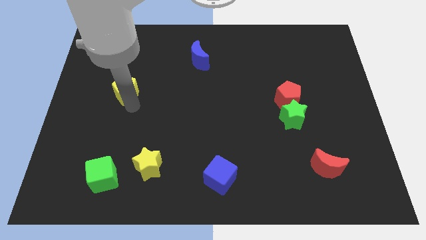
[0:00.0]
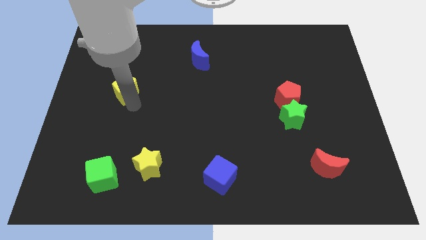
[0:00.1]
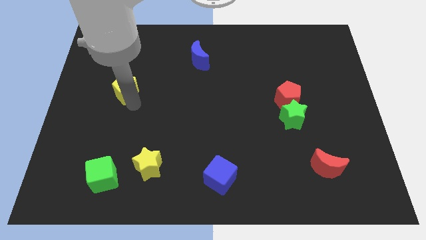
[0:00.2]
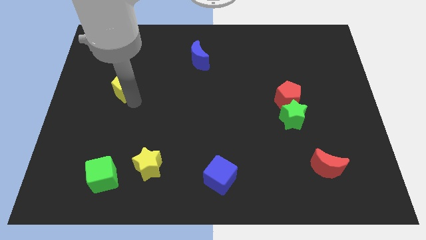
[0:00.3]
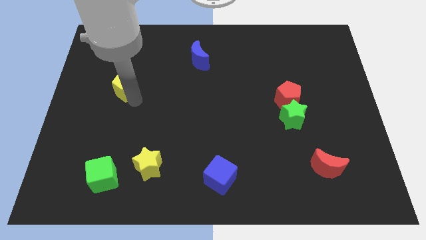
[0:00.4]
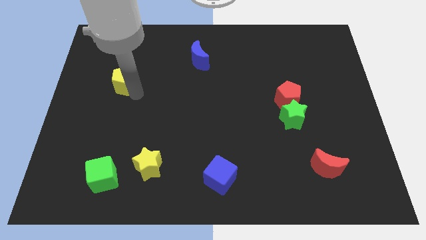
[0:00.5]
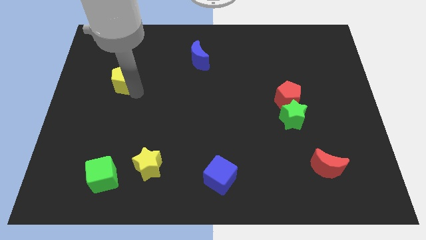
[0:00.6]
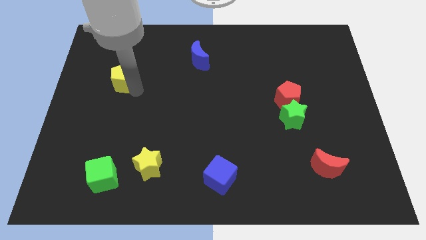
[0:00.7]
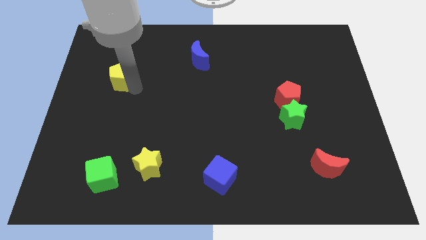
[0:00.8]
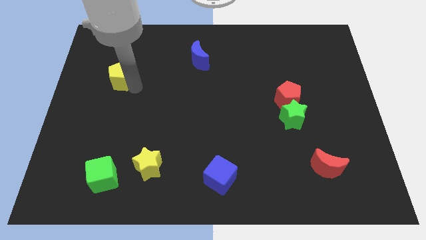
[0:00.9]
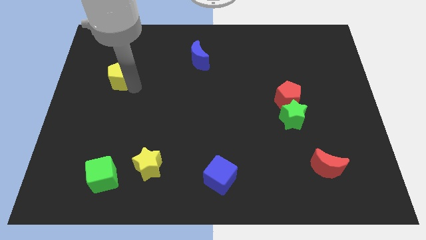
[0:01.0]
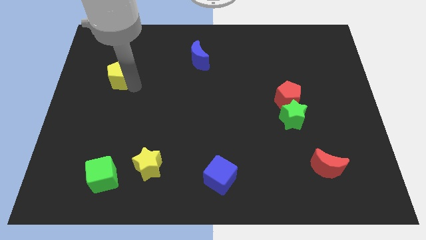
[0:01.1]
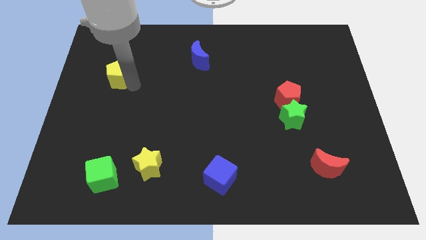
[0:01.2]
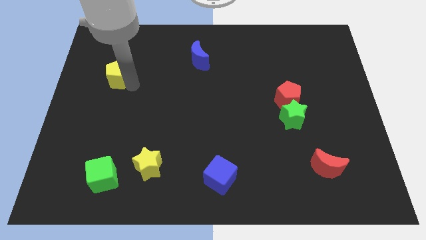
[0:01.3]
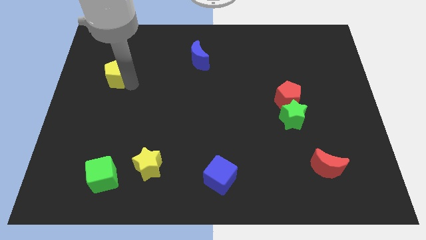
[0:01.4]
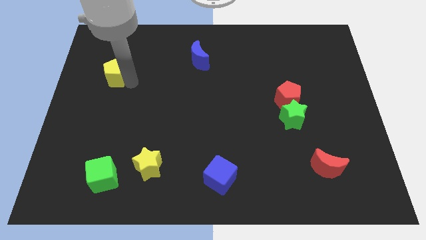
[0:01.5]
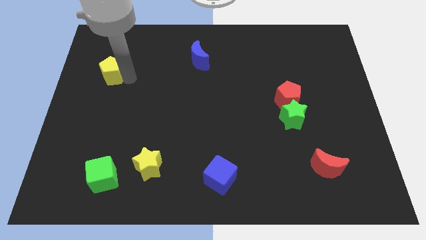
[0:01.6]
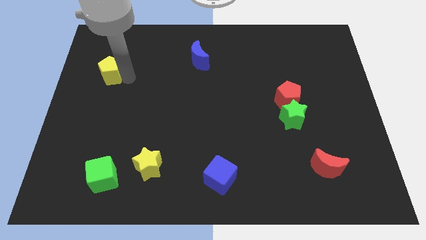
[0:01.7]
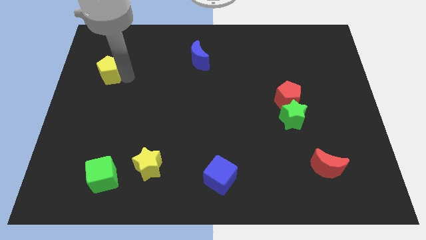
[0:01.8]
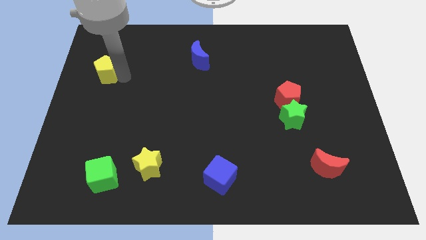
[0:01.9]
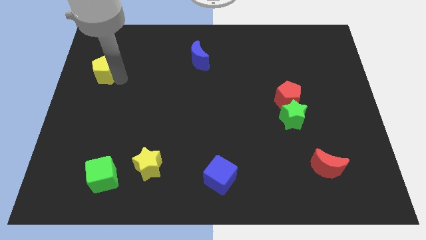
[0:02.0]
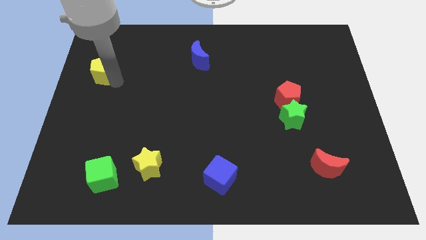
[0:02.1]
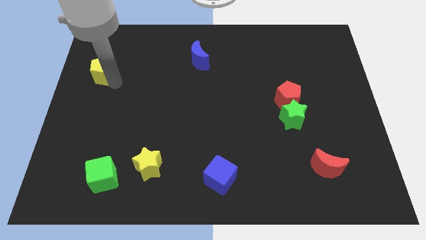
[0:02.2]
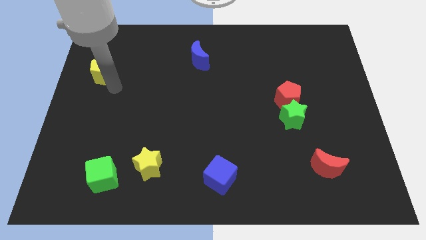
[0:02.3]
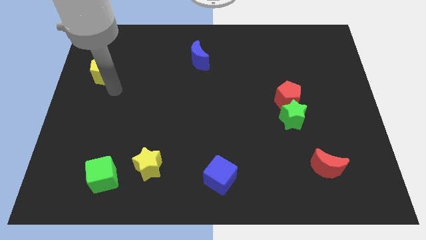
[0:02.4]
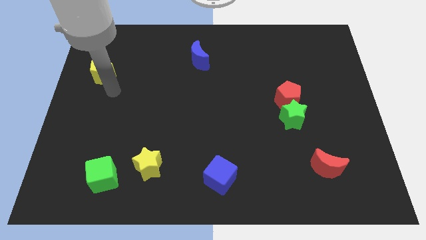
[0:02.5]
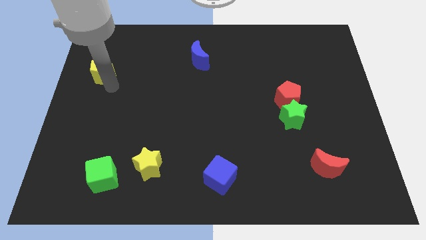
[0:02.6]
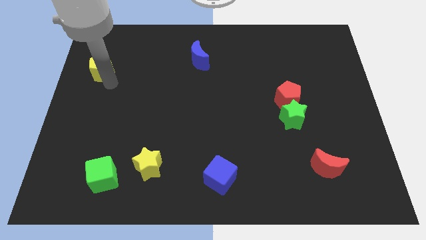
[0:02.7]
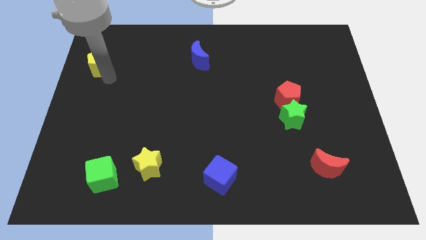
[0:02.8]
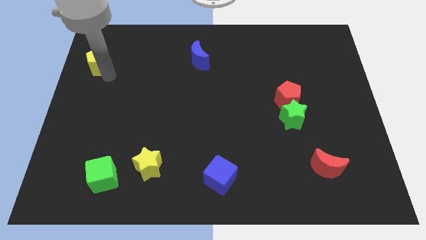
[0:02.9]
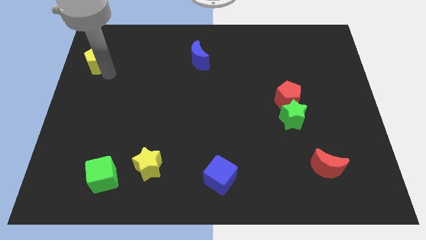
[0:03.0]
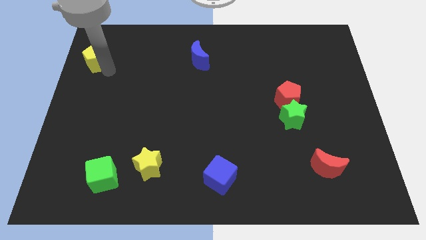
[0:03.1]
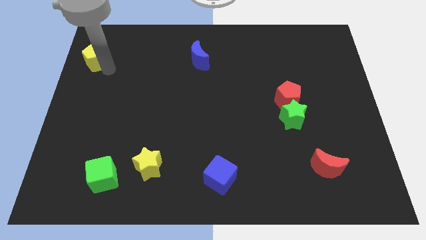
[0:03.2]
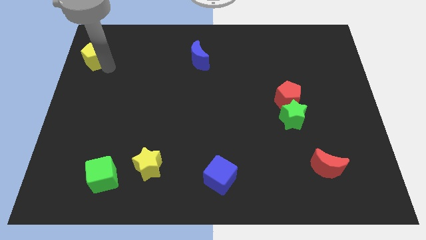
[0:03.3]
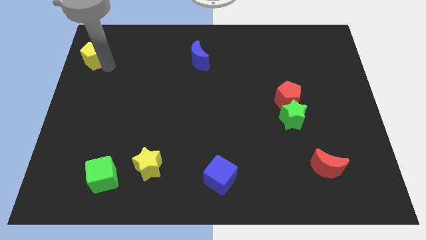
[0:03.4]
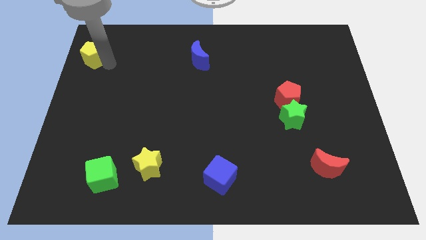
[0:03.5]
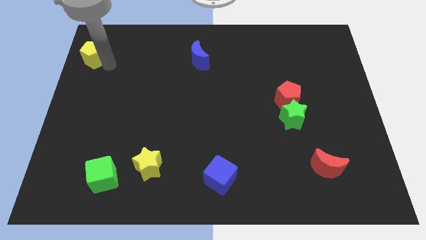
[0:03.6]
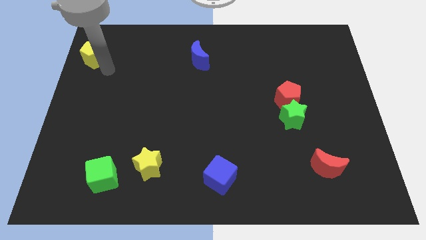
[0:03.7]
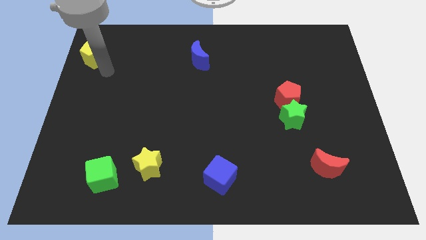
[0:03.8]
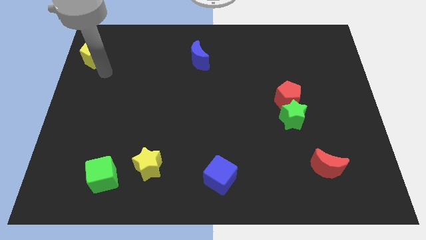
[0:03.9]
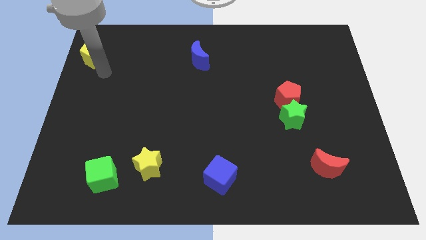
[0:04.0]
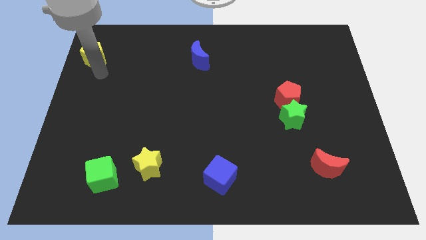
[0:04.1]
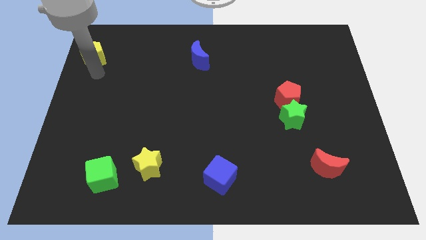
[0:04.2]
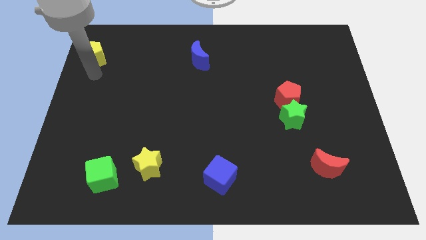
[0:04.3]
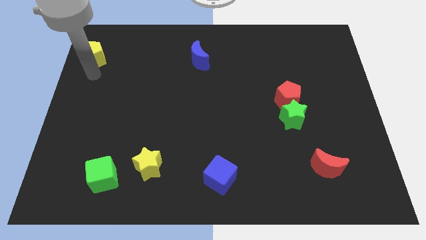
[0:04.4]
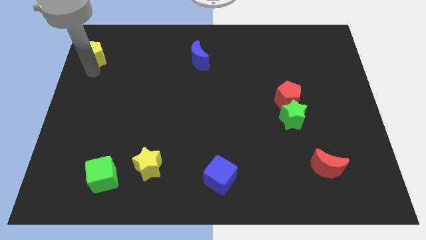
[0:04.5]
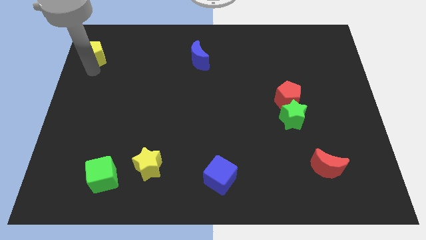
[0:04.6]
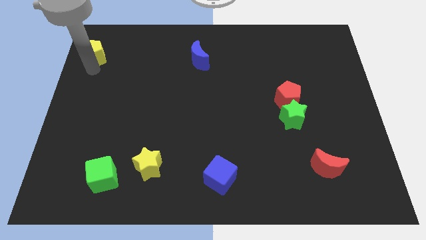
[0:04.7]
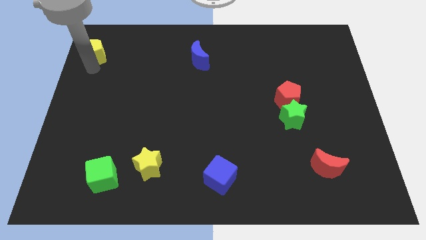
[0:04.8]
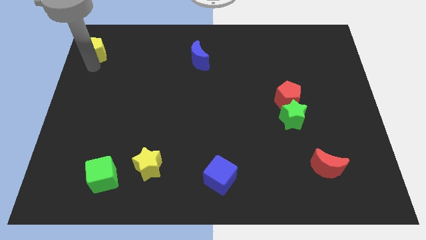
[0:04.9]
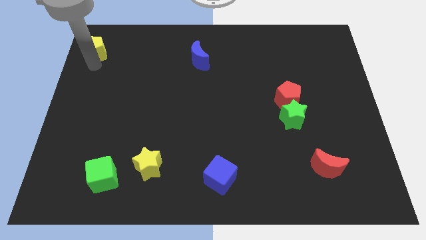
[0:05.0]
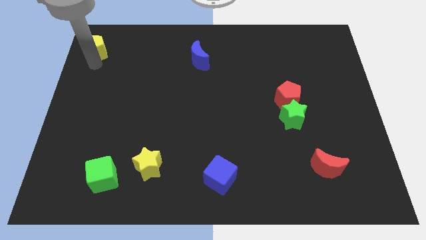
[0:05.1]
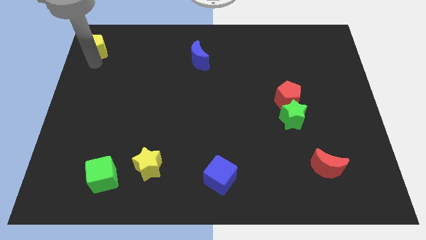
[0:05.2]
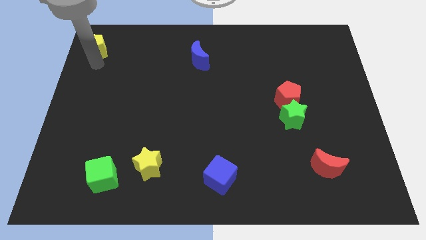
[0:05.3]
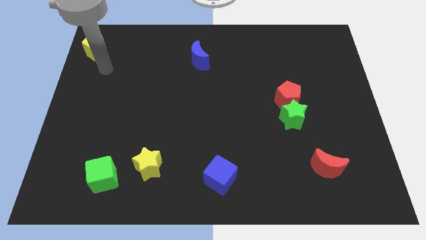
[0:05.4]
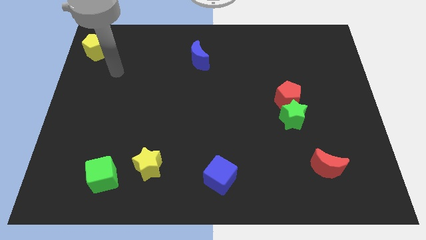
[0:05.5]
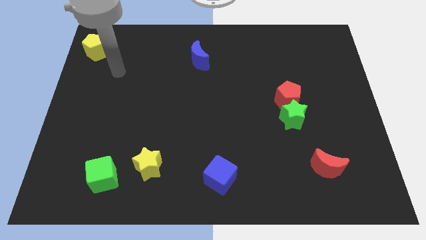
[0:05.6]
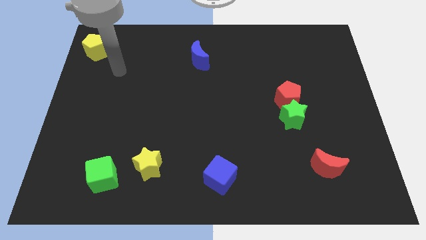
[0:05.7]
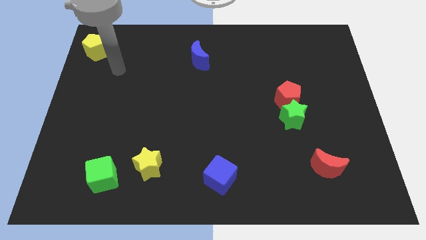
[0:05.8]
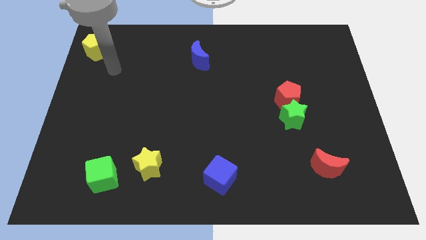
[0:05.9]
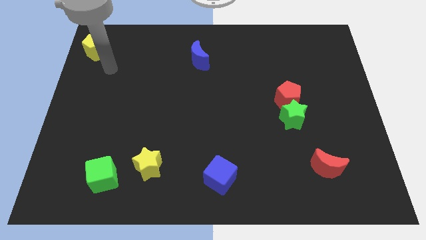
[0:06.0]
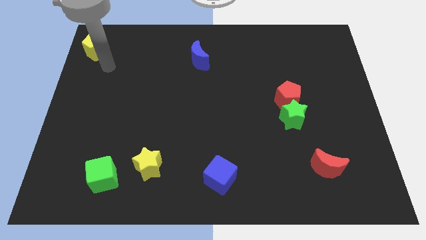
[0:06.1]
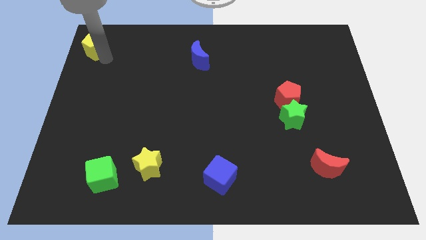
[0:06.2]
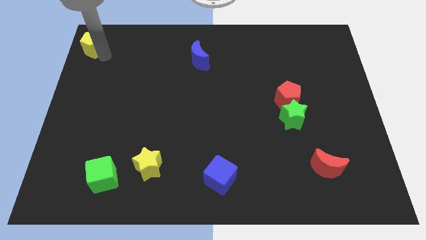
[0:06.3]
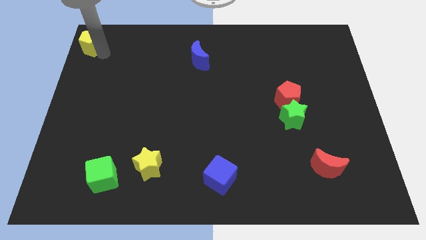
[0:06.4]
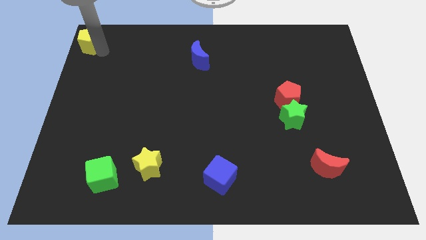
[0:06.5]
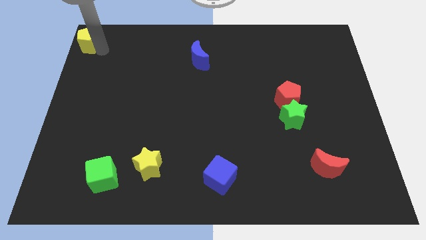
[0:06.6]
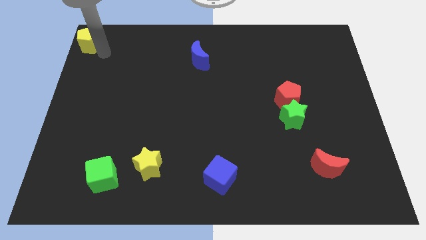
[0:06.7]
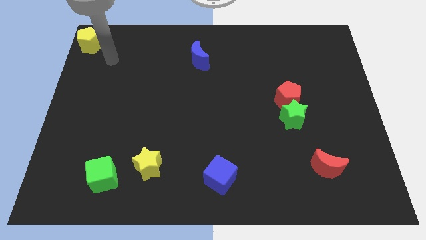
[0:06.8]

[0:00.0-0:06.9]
move the yellow pentagon to the top left corner of the board

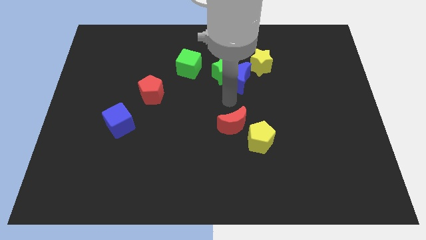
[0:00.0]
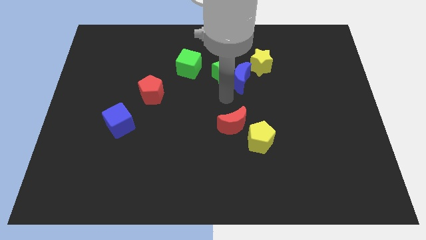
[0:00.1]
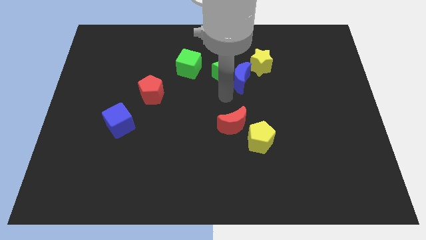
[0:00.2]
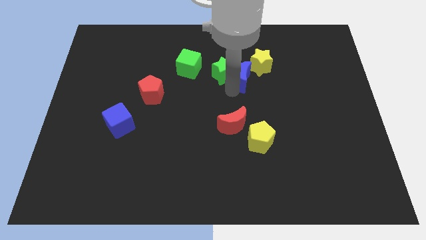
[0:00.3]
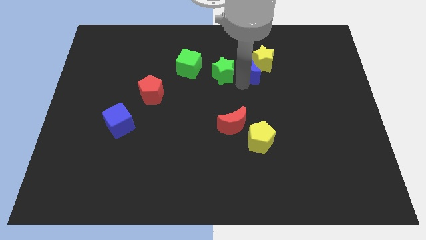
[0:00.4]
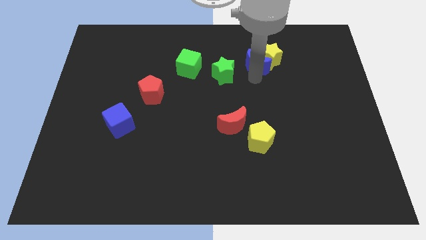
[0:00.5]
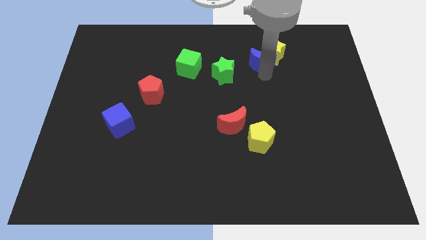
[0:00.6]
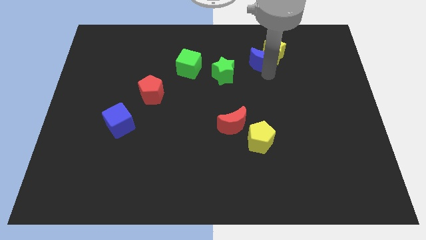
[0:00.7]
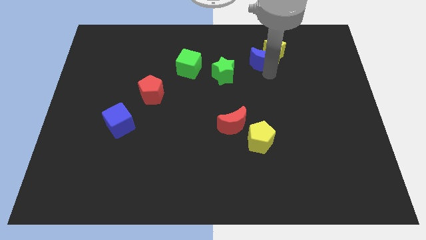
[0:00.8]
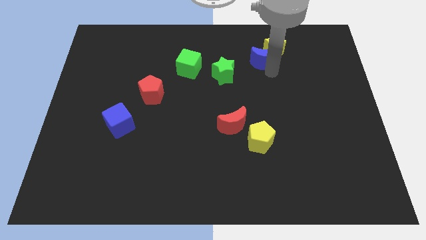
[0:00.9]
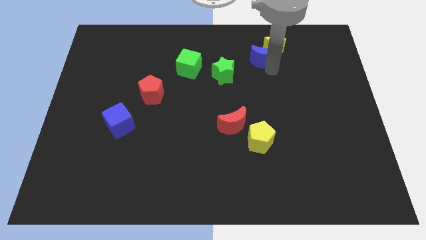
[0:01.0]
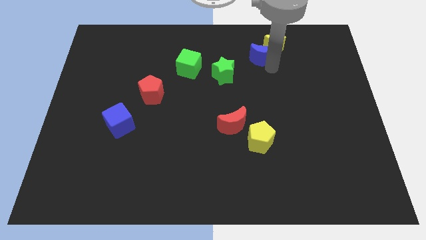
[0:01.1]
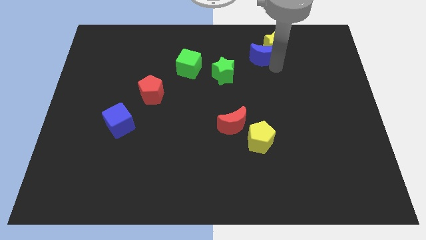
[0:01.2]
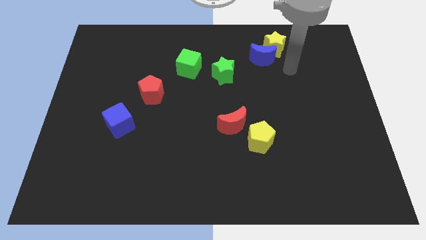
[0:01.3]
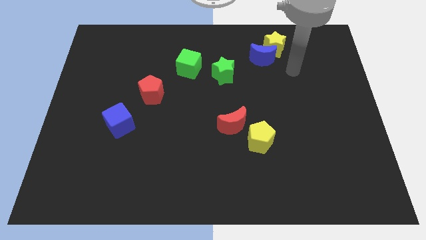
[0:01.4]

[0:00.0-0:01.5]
slide blue moon and the yellow star away from the green star

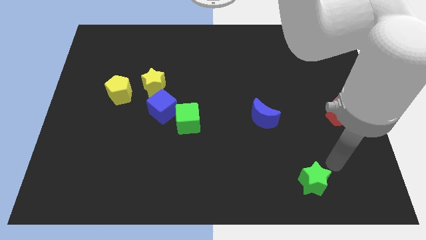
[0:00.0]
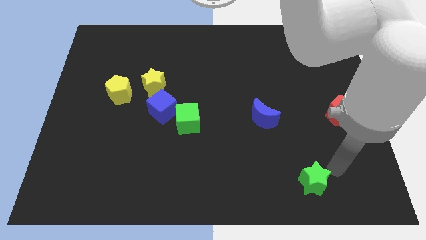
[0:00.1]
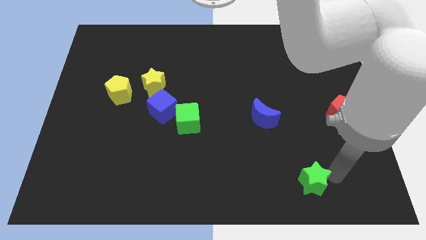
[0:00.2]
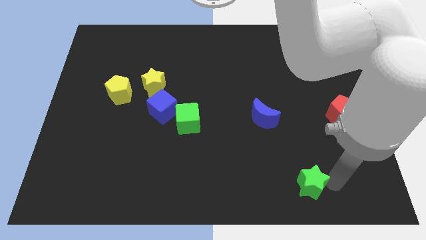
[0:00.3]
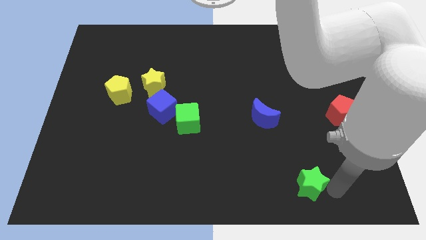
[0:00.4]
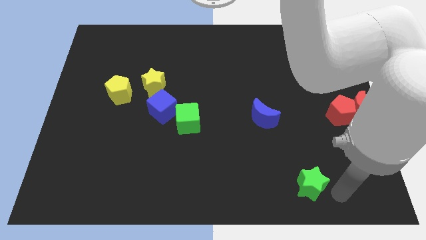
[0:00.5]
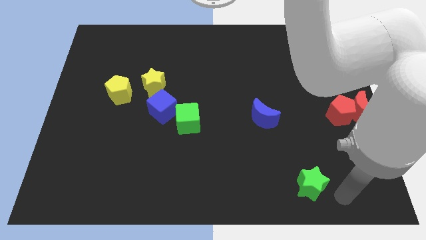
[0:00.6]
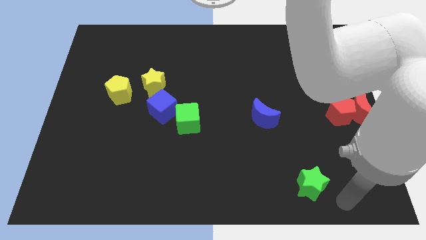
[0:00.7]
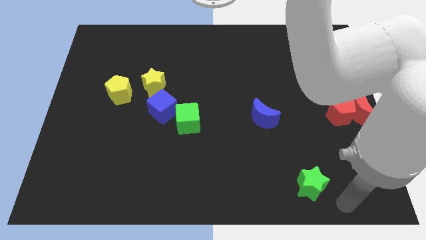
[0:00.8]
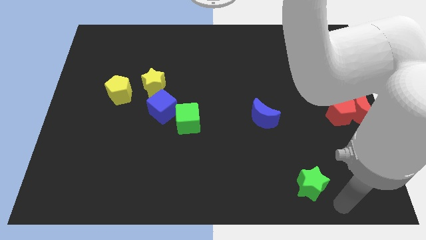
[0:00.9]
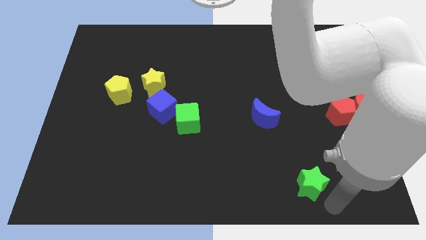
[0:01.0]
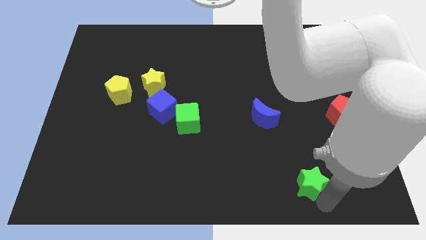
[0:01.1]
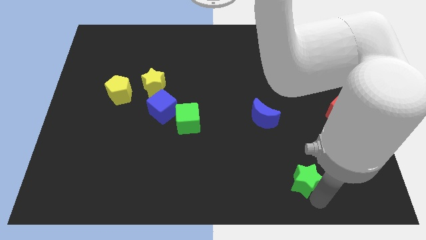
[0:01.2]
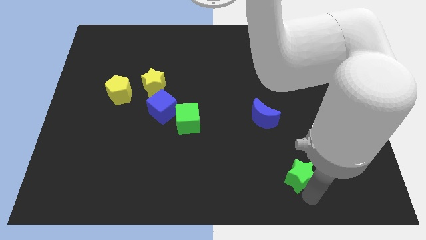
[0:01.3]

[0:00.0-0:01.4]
push green star slightly upwards
